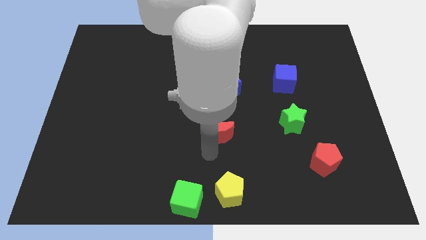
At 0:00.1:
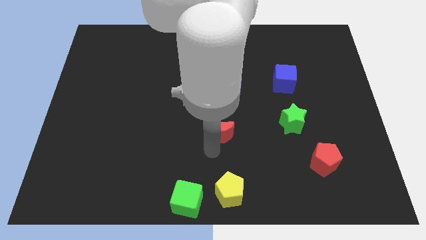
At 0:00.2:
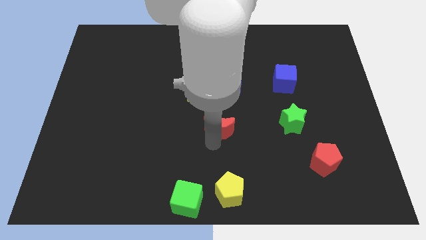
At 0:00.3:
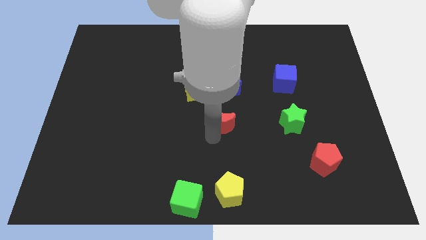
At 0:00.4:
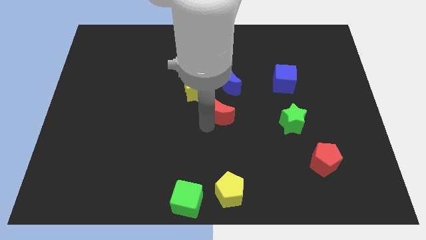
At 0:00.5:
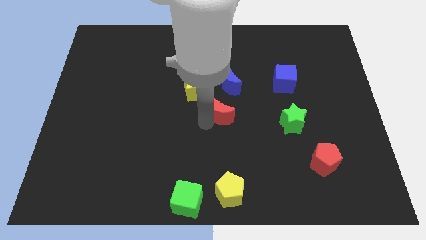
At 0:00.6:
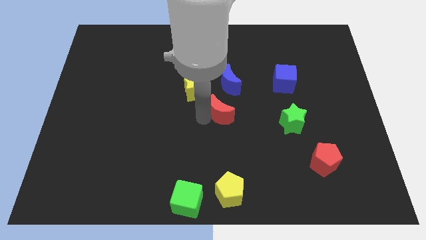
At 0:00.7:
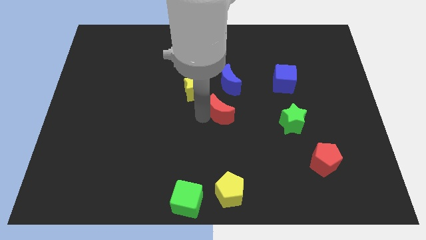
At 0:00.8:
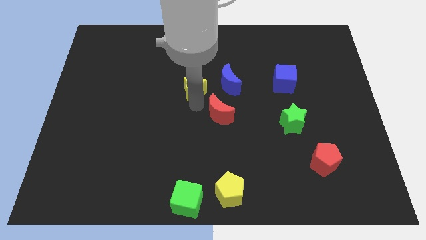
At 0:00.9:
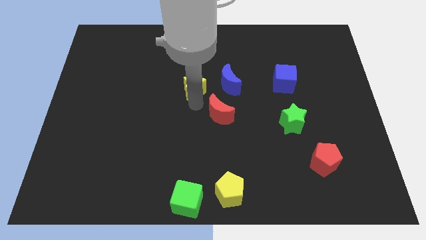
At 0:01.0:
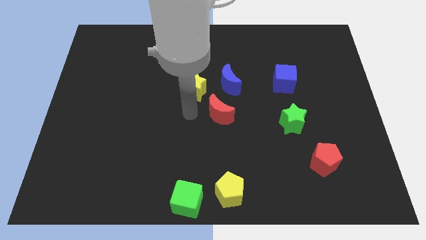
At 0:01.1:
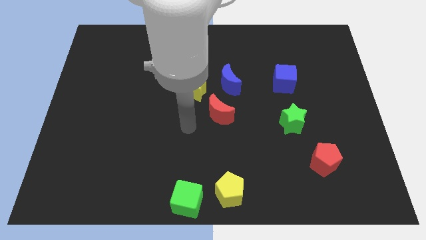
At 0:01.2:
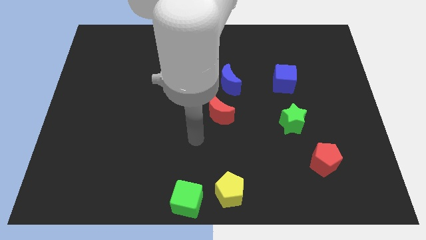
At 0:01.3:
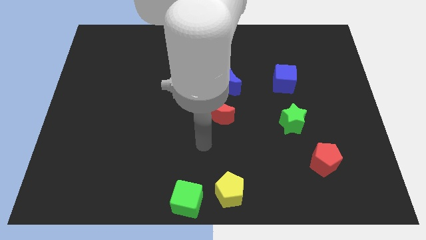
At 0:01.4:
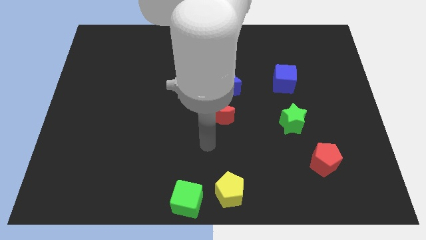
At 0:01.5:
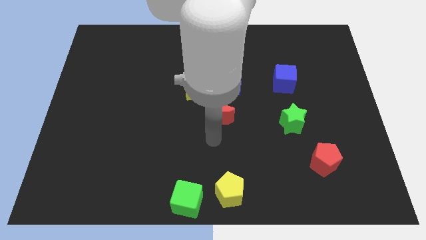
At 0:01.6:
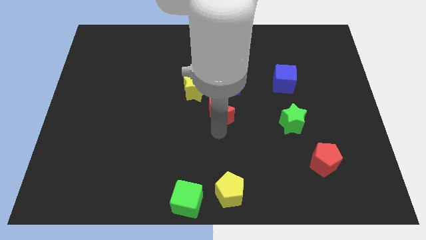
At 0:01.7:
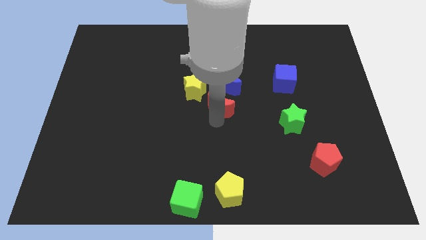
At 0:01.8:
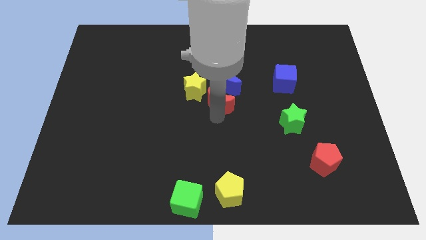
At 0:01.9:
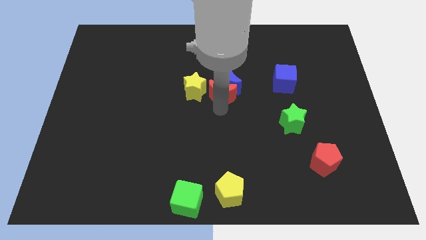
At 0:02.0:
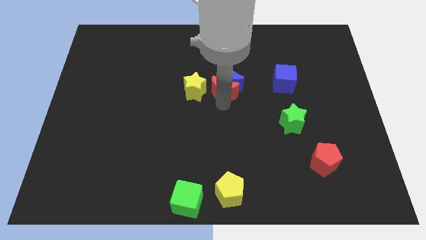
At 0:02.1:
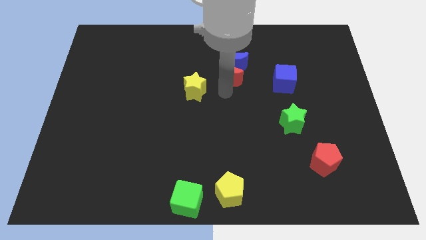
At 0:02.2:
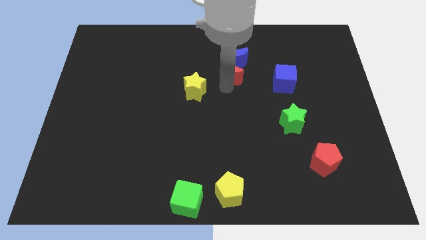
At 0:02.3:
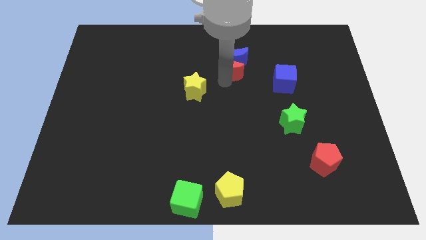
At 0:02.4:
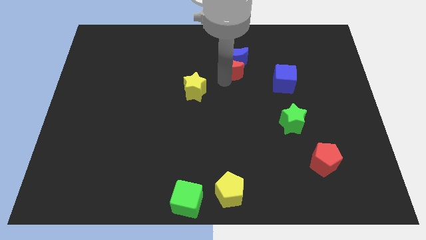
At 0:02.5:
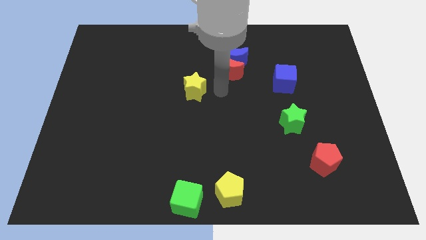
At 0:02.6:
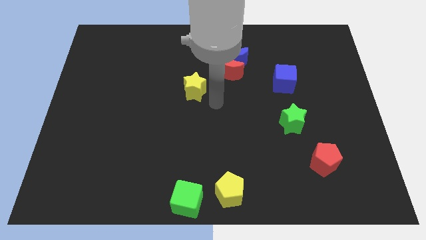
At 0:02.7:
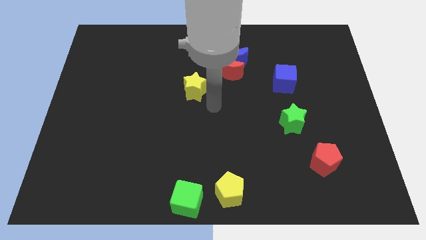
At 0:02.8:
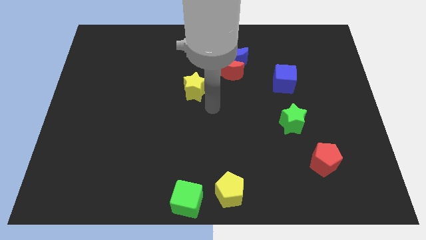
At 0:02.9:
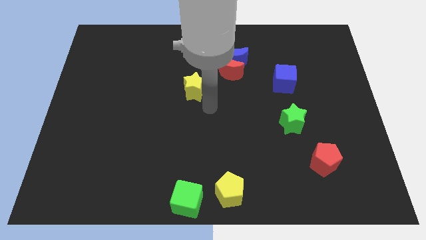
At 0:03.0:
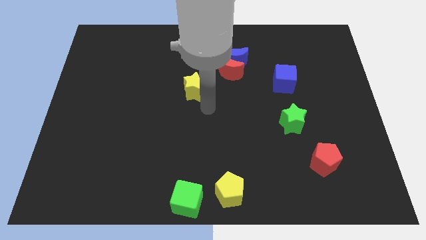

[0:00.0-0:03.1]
push red moon into the blue moon

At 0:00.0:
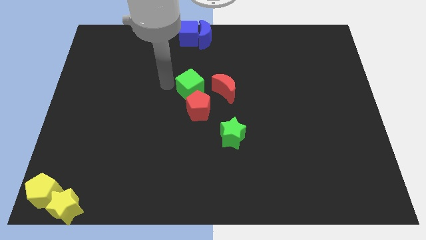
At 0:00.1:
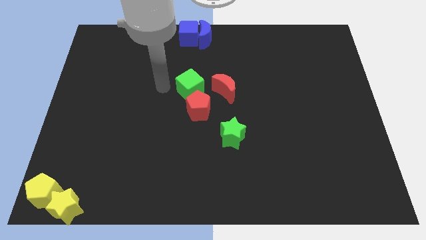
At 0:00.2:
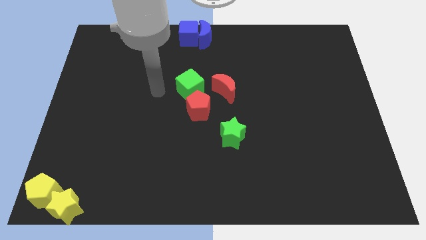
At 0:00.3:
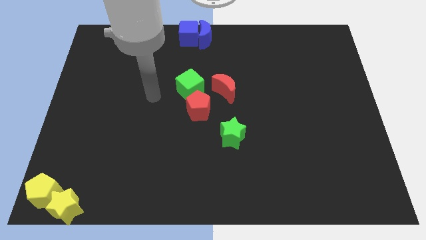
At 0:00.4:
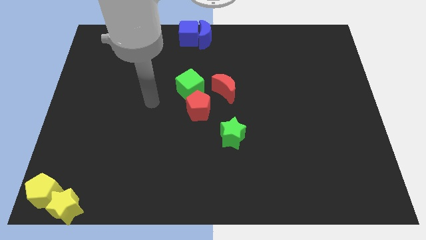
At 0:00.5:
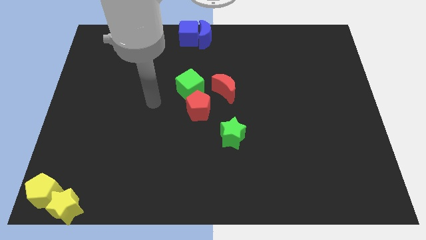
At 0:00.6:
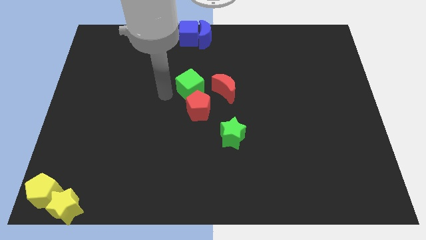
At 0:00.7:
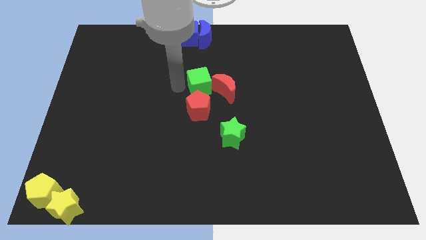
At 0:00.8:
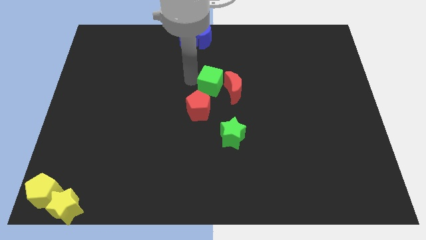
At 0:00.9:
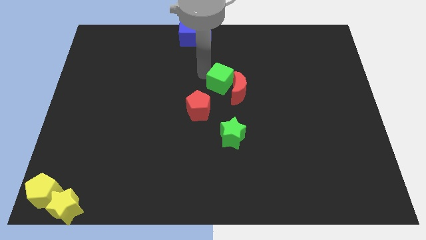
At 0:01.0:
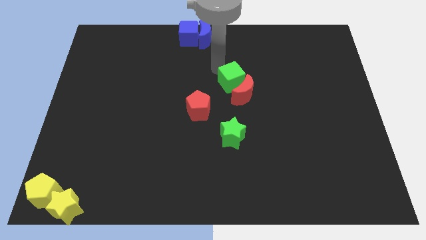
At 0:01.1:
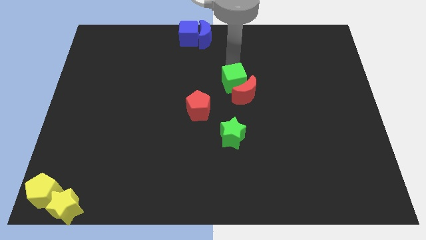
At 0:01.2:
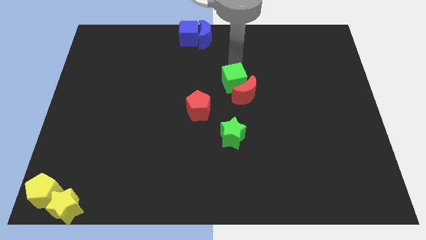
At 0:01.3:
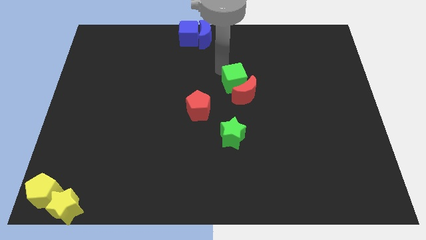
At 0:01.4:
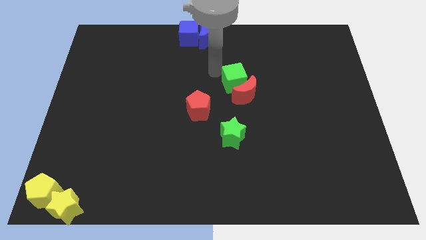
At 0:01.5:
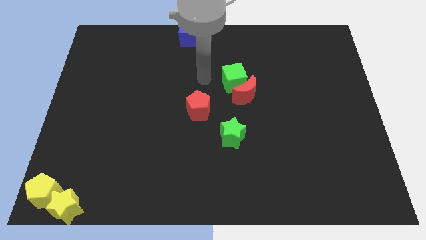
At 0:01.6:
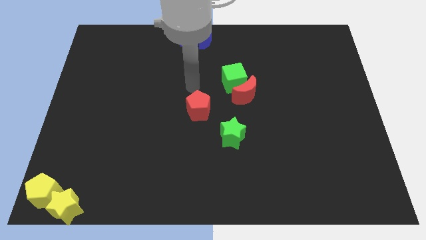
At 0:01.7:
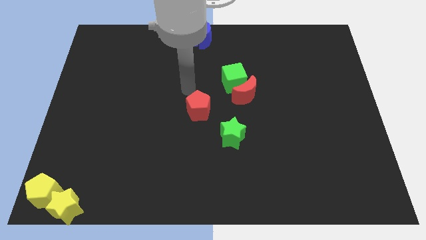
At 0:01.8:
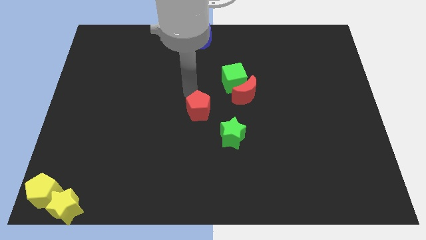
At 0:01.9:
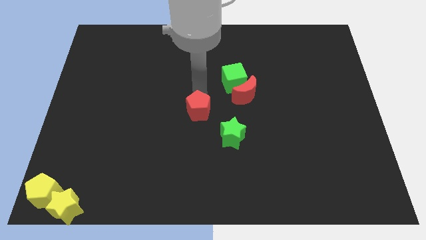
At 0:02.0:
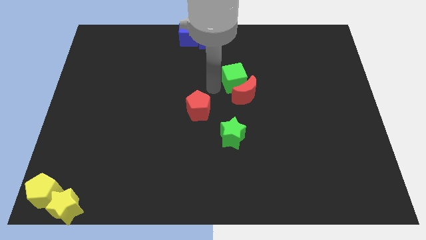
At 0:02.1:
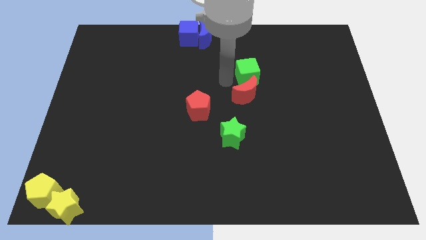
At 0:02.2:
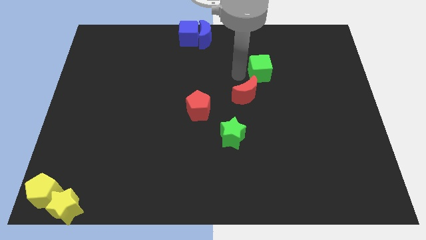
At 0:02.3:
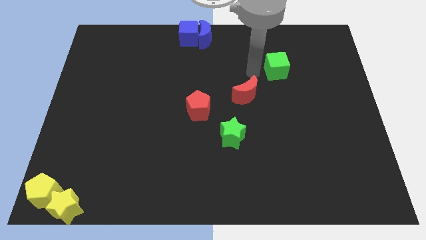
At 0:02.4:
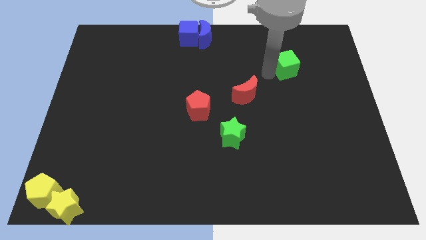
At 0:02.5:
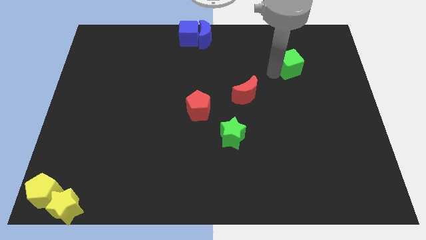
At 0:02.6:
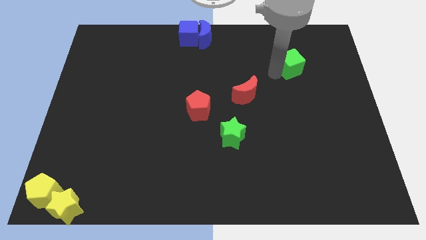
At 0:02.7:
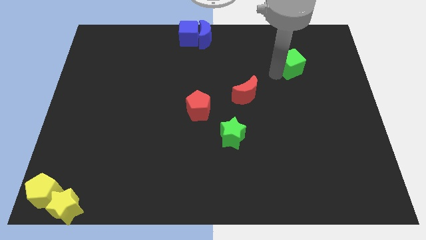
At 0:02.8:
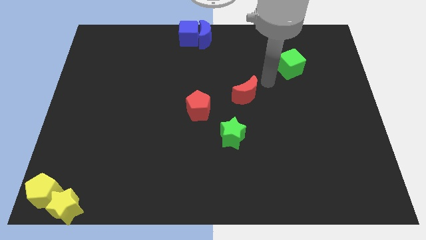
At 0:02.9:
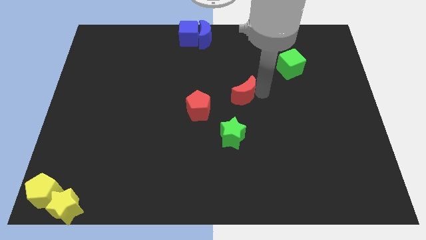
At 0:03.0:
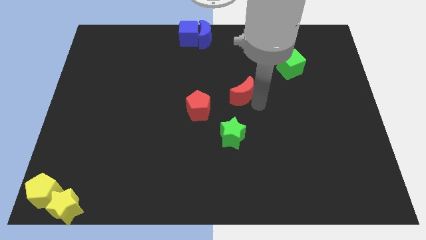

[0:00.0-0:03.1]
move the green cube to the top right

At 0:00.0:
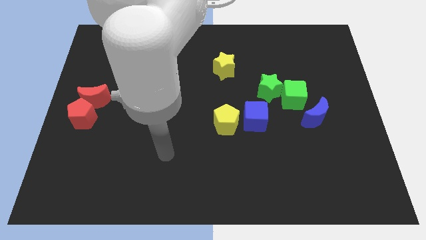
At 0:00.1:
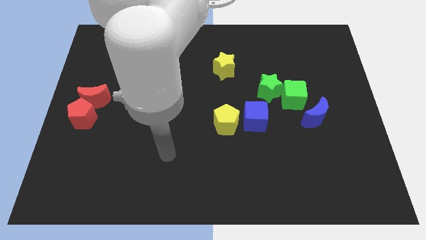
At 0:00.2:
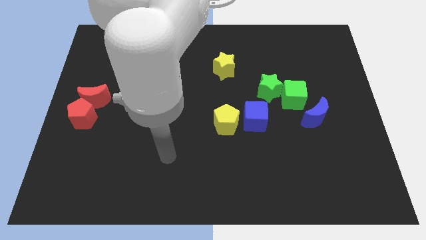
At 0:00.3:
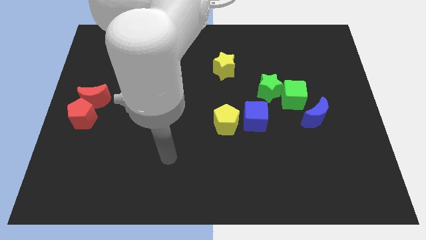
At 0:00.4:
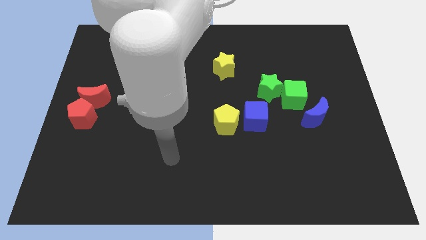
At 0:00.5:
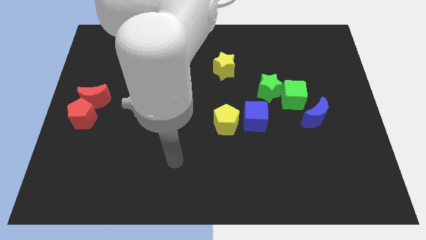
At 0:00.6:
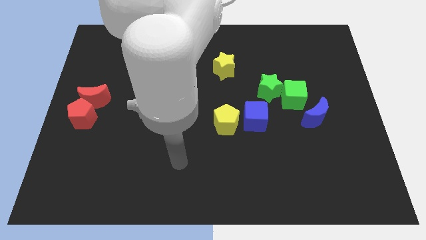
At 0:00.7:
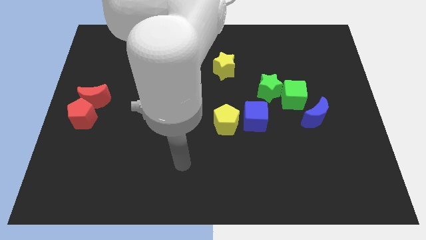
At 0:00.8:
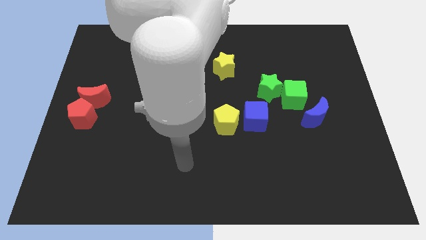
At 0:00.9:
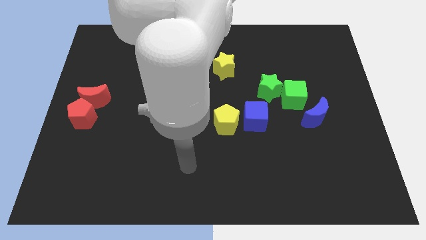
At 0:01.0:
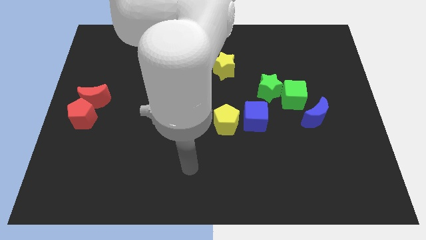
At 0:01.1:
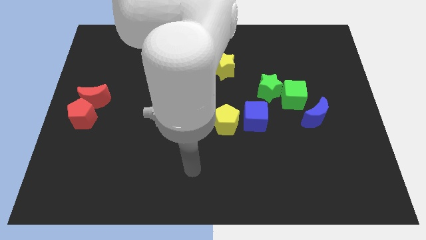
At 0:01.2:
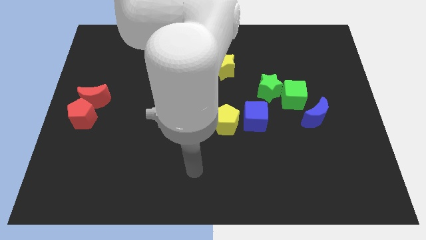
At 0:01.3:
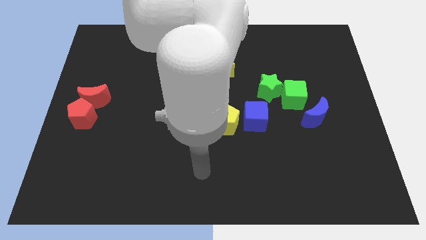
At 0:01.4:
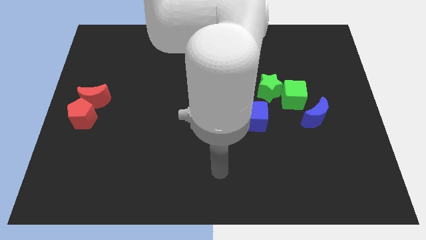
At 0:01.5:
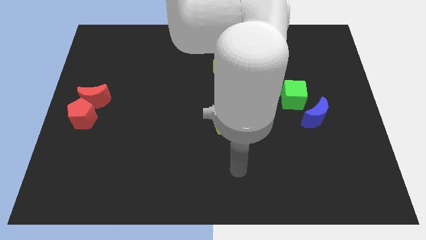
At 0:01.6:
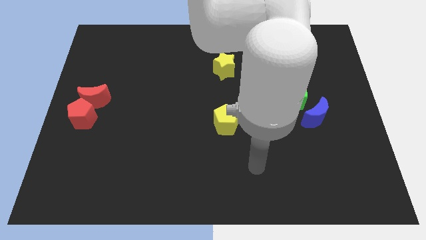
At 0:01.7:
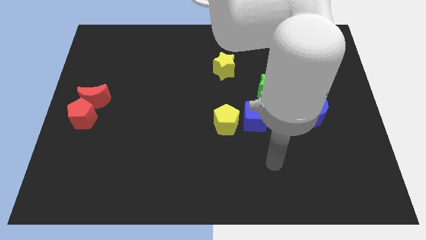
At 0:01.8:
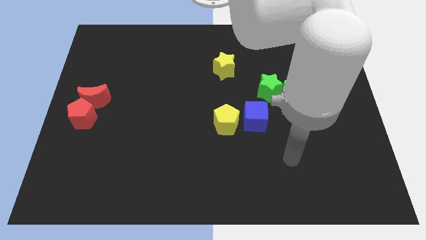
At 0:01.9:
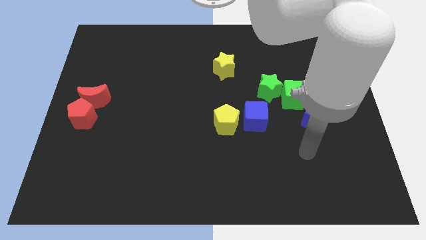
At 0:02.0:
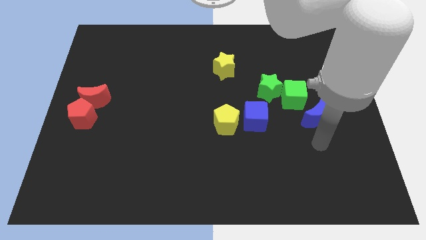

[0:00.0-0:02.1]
move the arm towards the blue crescent

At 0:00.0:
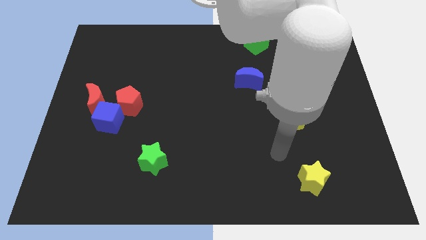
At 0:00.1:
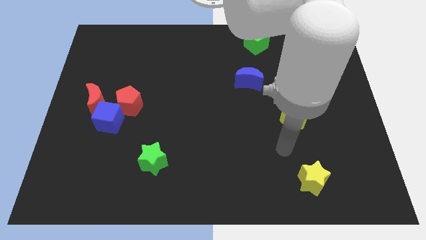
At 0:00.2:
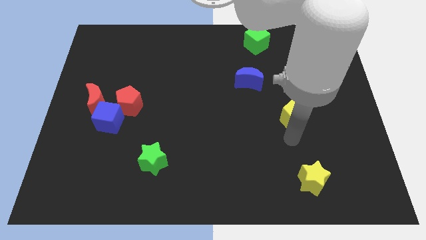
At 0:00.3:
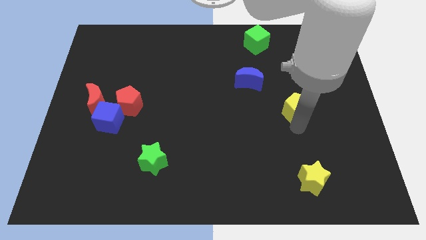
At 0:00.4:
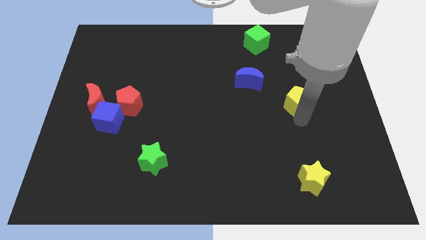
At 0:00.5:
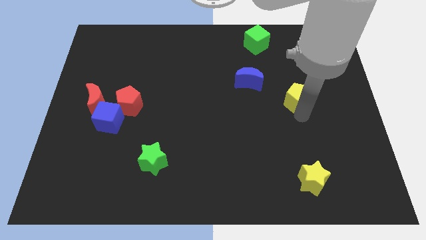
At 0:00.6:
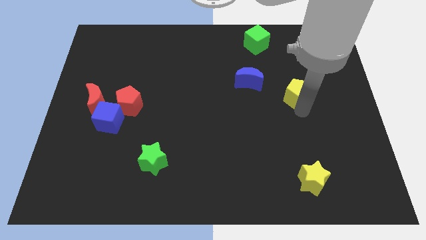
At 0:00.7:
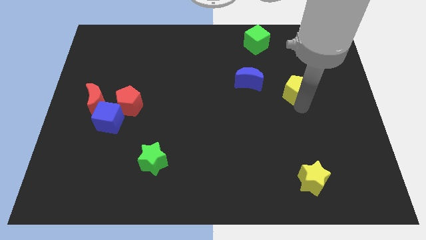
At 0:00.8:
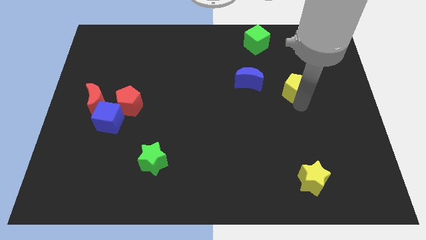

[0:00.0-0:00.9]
push yellow pentagon upwards
